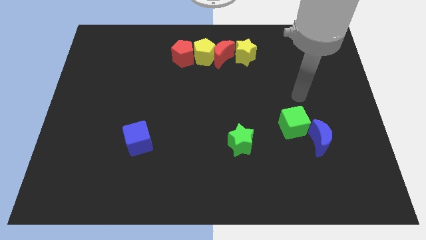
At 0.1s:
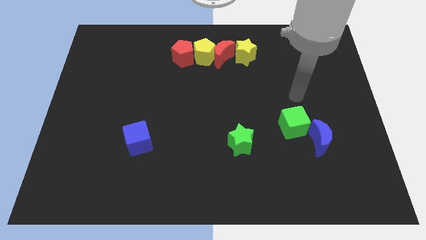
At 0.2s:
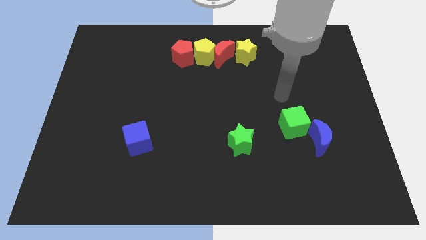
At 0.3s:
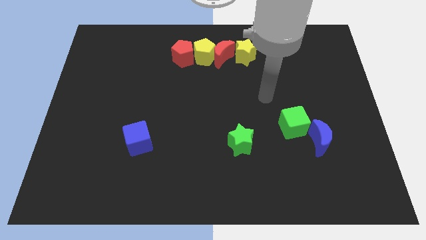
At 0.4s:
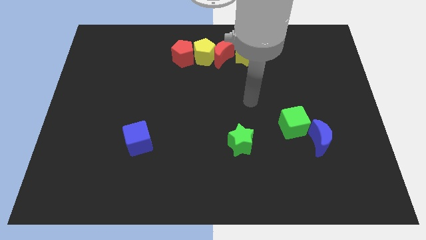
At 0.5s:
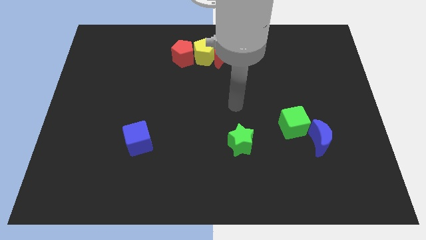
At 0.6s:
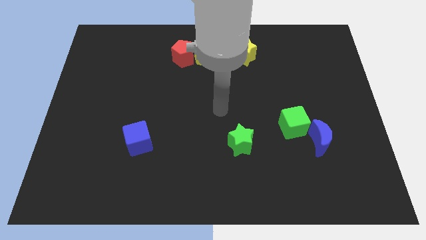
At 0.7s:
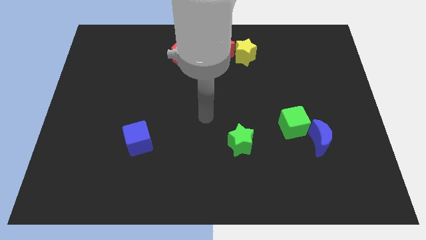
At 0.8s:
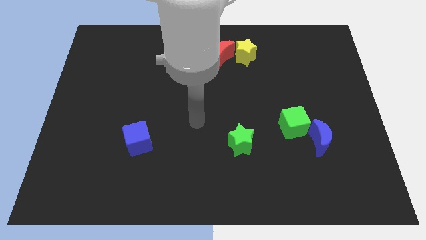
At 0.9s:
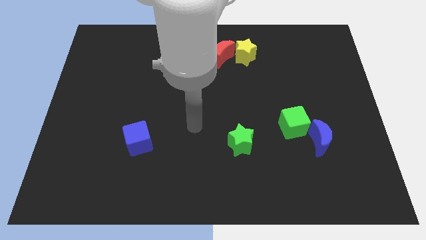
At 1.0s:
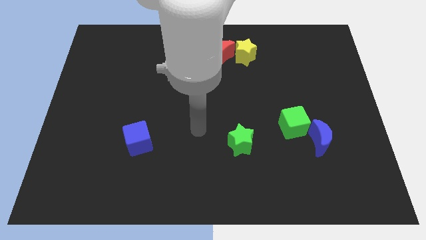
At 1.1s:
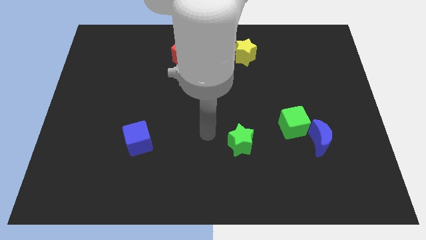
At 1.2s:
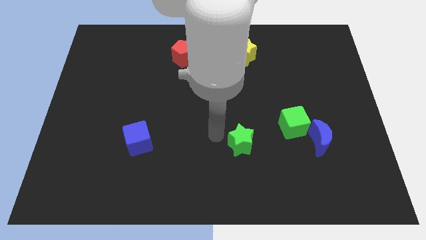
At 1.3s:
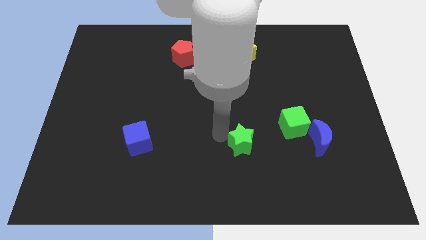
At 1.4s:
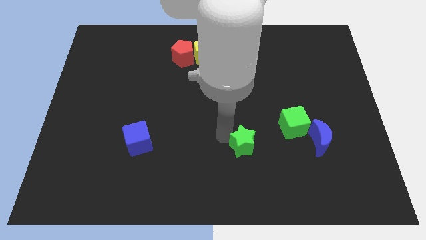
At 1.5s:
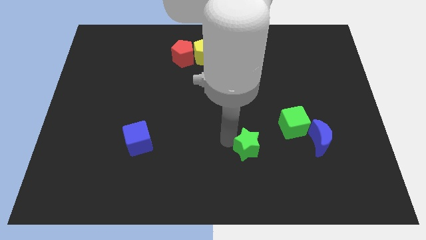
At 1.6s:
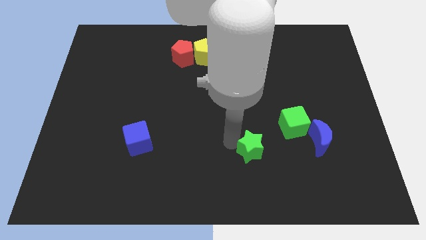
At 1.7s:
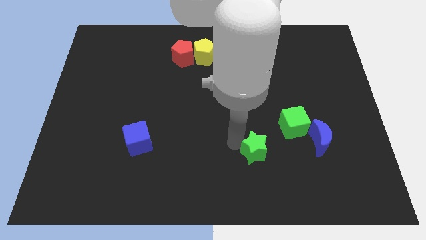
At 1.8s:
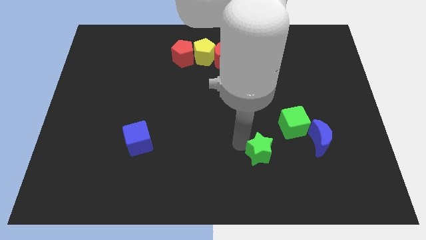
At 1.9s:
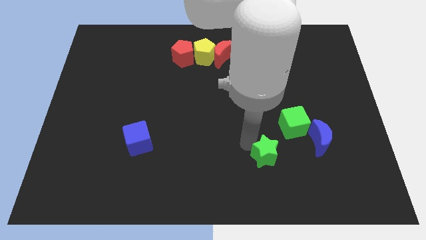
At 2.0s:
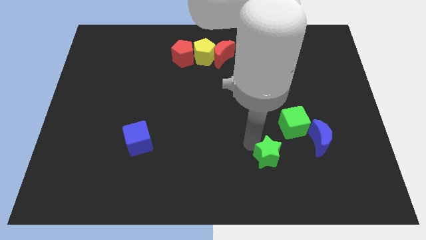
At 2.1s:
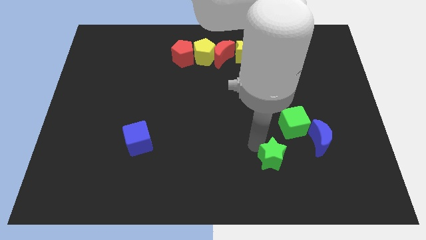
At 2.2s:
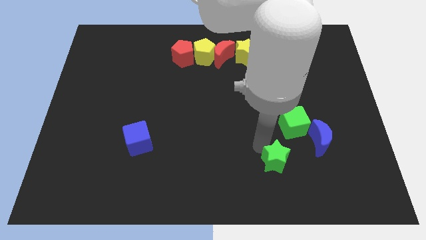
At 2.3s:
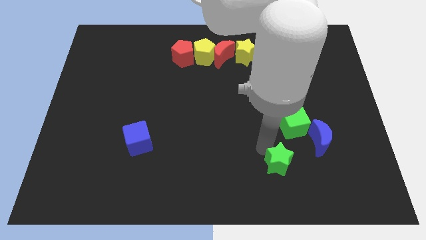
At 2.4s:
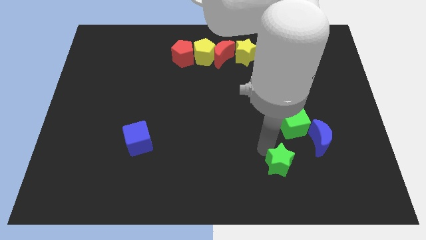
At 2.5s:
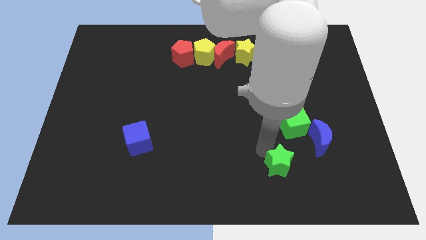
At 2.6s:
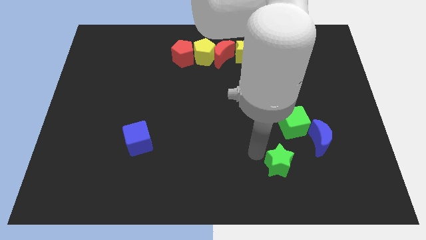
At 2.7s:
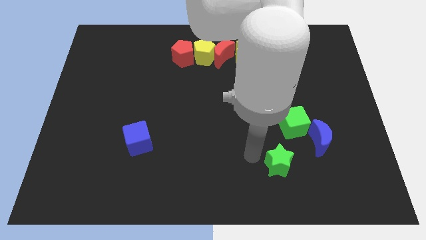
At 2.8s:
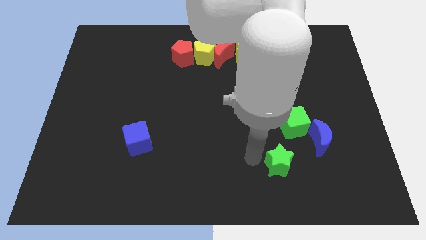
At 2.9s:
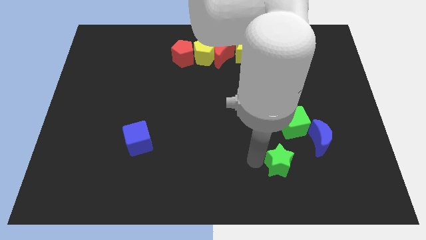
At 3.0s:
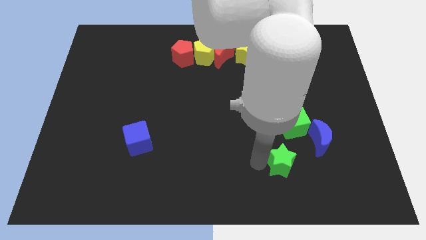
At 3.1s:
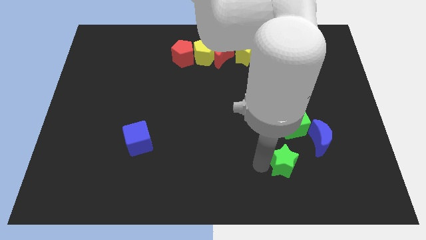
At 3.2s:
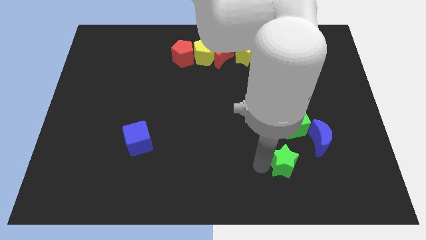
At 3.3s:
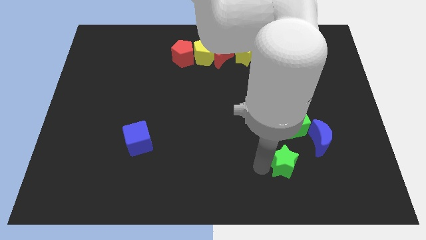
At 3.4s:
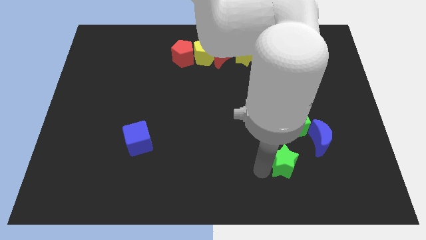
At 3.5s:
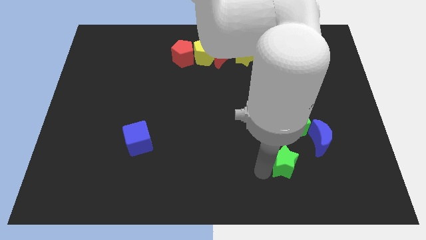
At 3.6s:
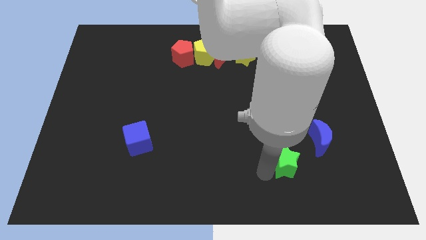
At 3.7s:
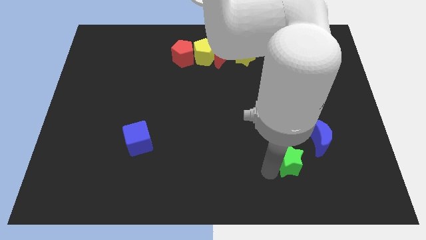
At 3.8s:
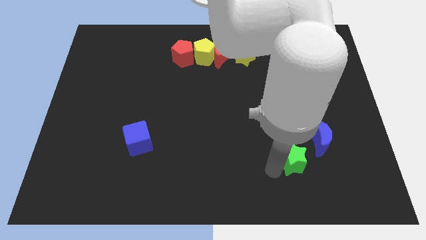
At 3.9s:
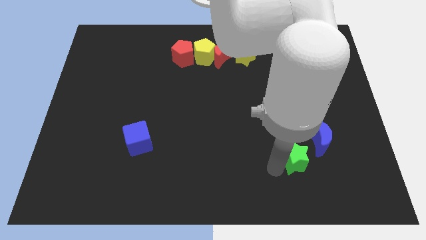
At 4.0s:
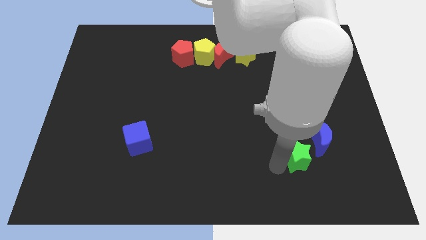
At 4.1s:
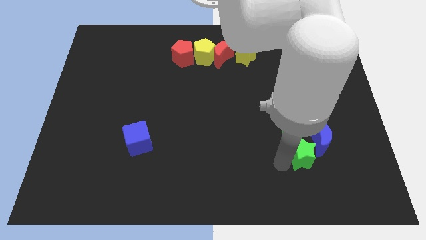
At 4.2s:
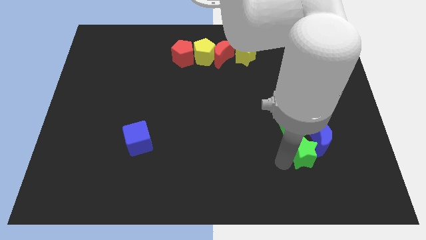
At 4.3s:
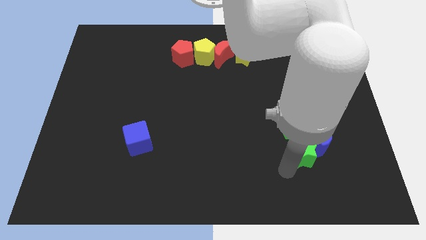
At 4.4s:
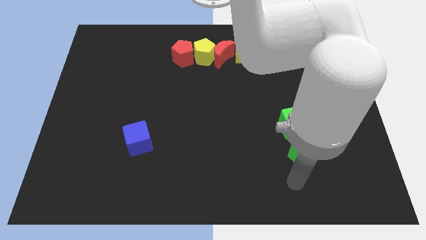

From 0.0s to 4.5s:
place the green star below the green cube

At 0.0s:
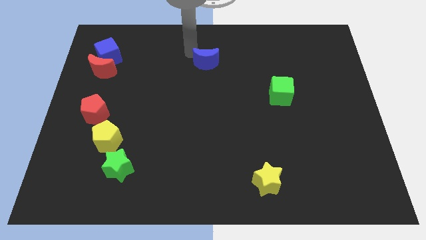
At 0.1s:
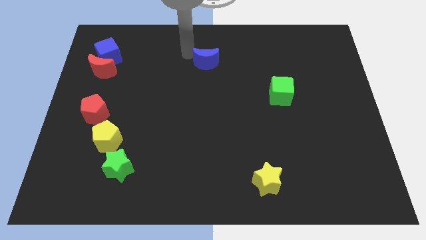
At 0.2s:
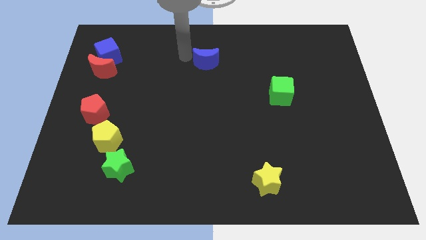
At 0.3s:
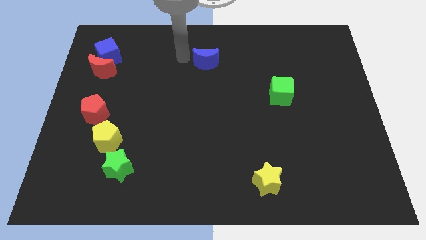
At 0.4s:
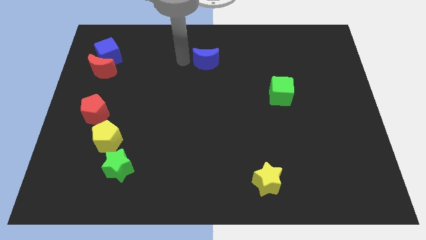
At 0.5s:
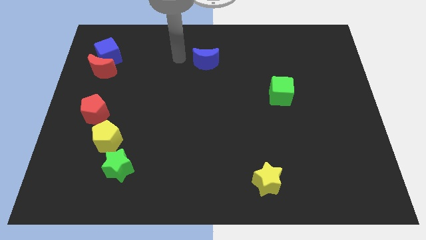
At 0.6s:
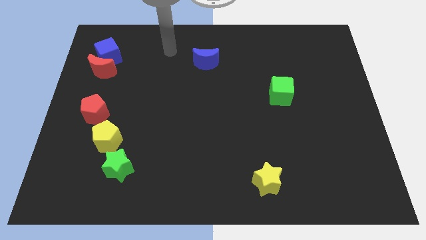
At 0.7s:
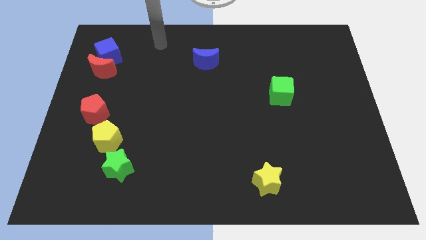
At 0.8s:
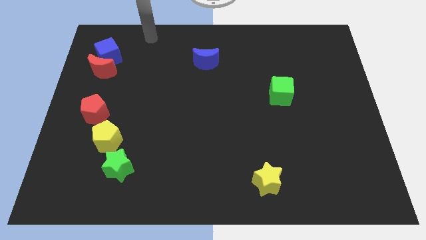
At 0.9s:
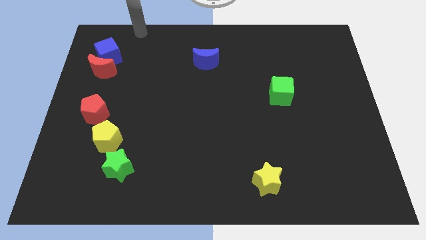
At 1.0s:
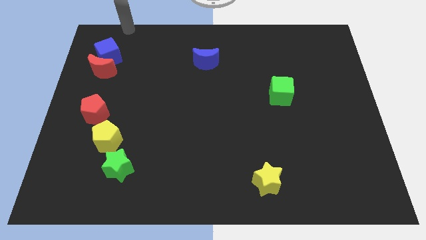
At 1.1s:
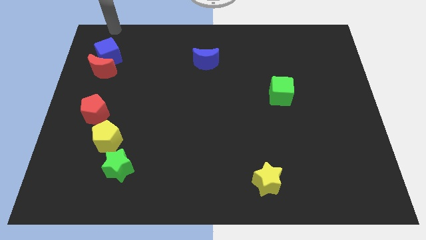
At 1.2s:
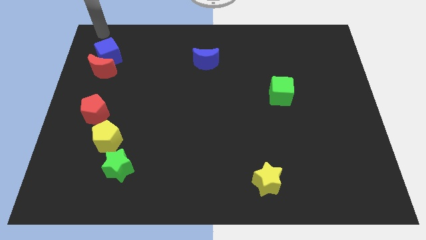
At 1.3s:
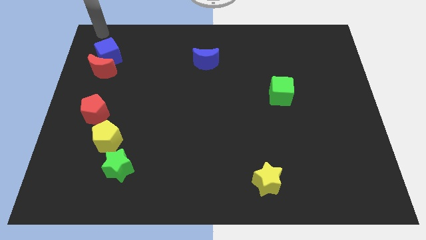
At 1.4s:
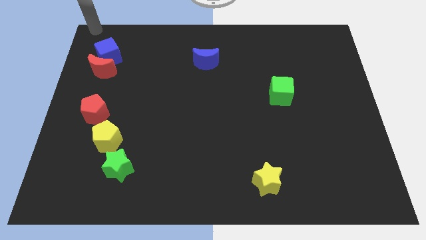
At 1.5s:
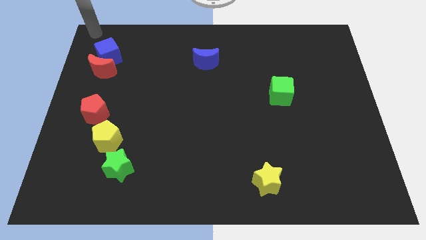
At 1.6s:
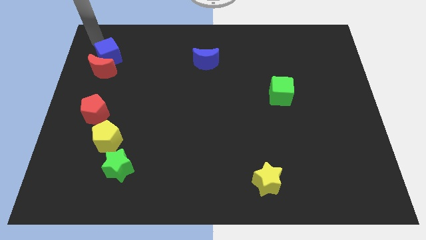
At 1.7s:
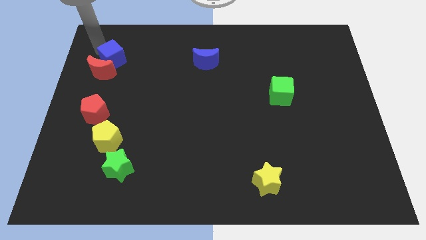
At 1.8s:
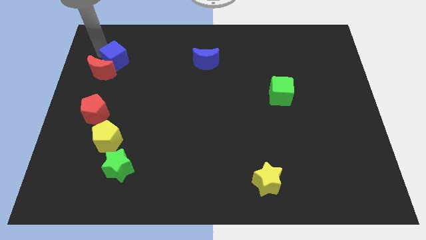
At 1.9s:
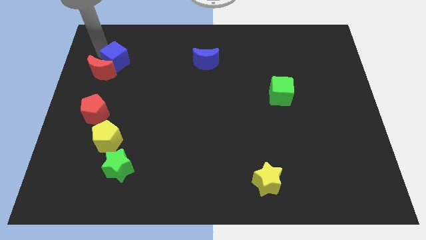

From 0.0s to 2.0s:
move the arm to the cube

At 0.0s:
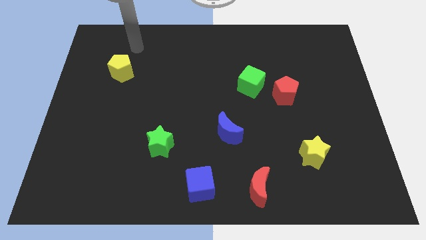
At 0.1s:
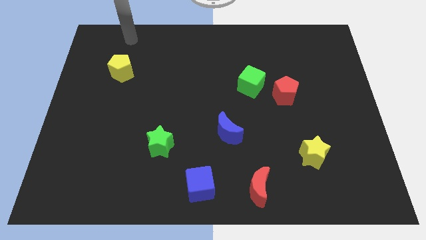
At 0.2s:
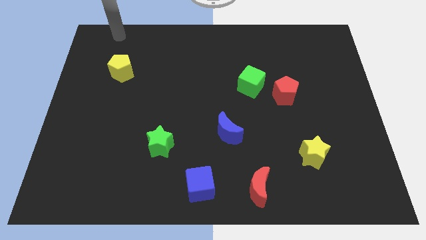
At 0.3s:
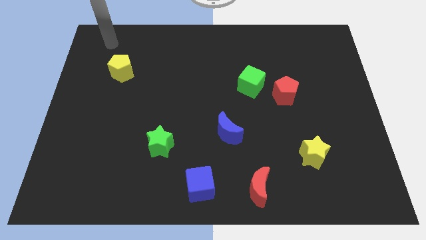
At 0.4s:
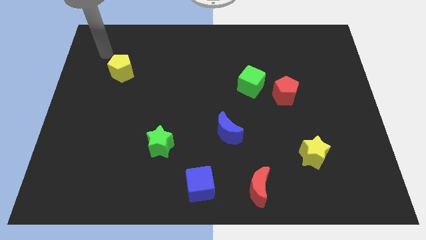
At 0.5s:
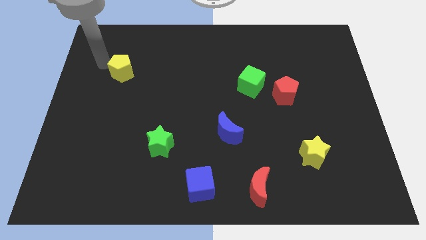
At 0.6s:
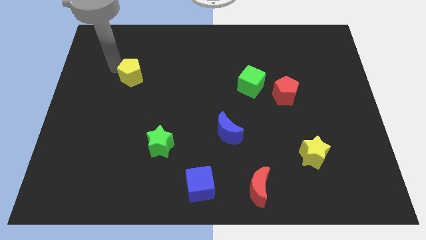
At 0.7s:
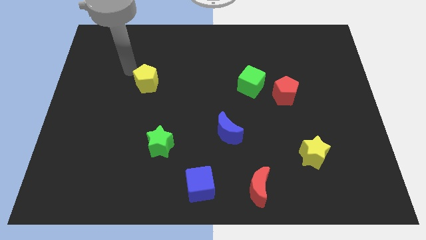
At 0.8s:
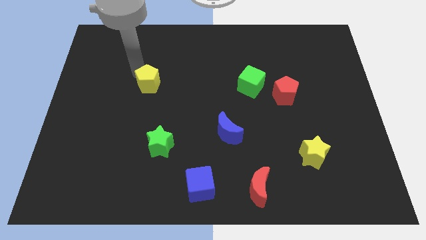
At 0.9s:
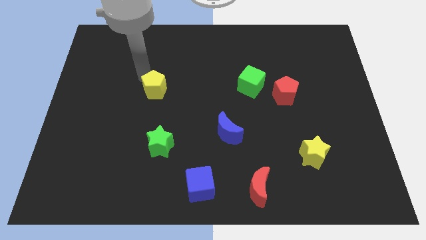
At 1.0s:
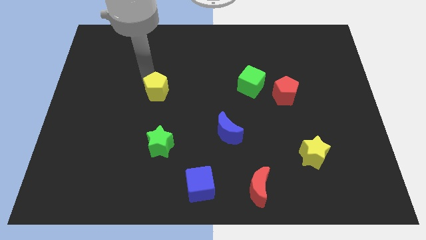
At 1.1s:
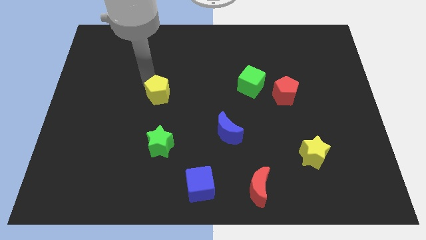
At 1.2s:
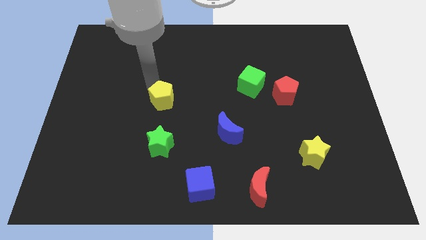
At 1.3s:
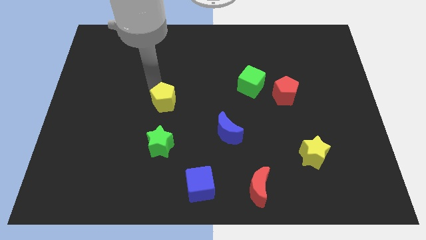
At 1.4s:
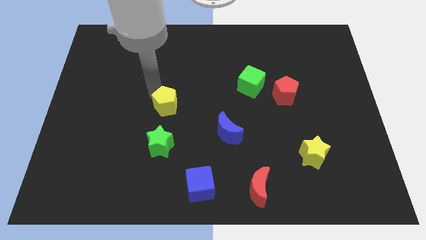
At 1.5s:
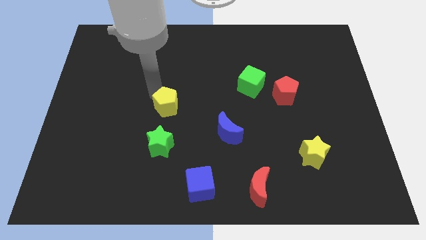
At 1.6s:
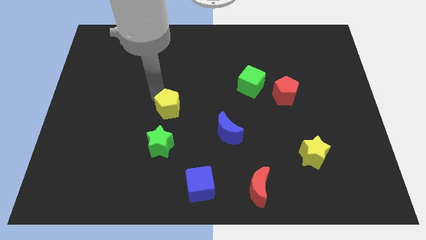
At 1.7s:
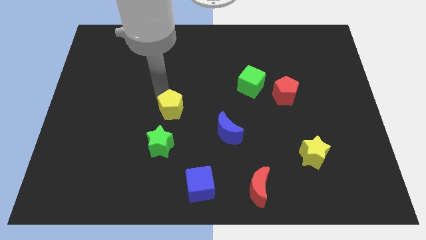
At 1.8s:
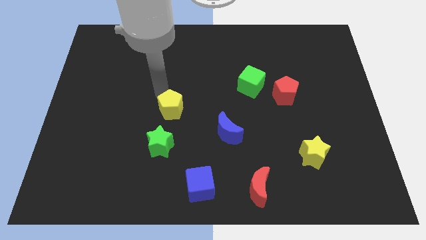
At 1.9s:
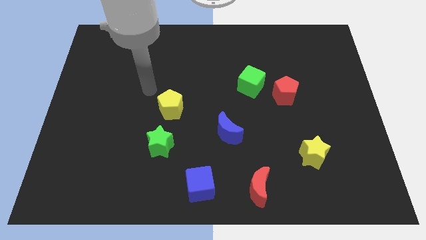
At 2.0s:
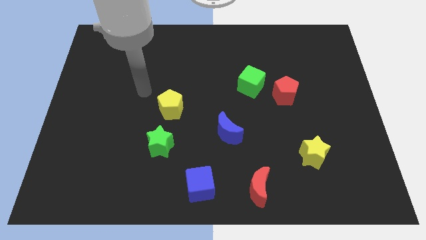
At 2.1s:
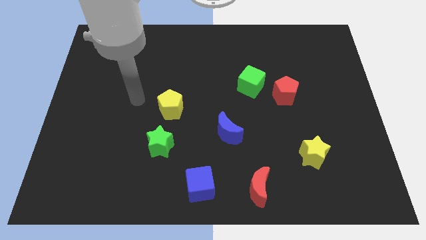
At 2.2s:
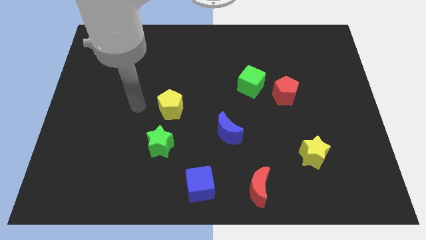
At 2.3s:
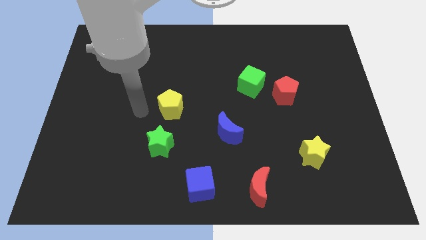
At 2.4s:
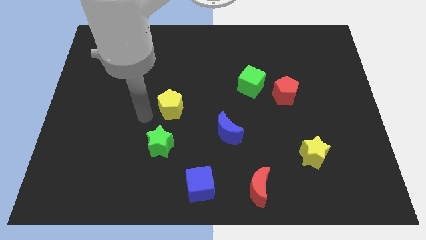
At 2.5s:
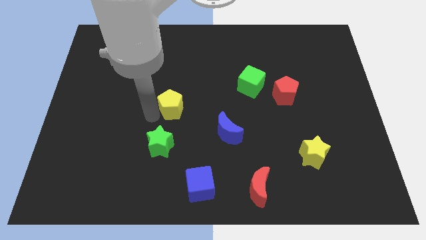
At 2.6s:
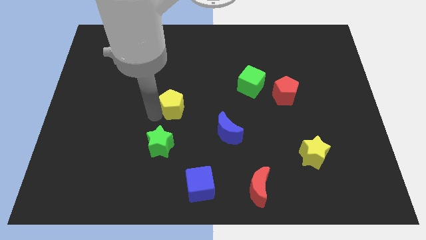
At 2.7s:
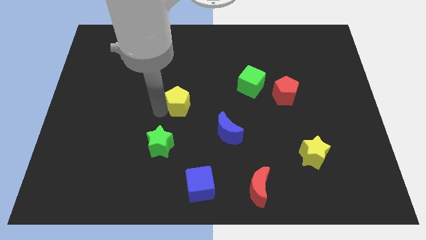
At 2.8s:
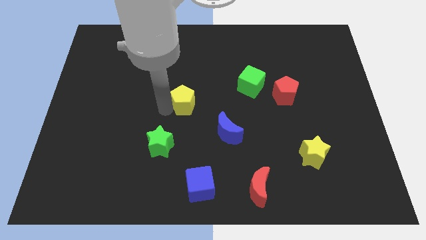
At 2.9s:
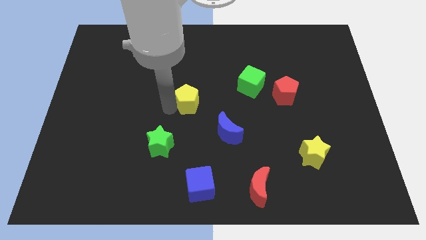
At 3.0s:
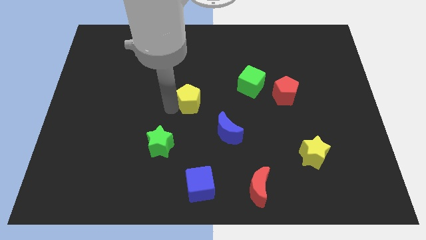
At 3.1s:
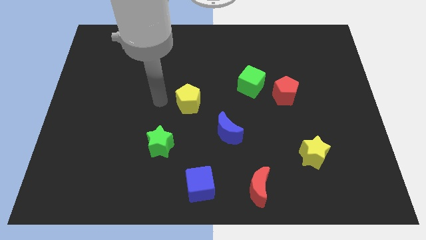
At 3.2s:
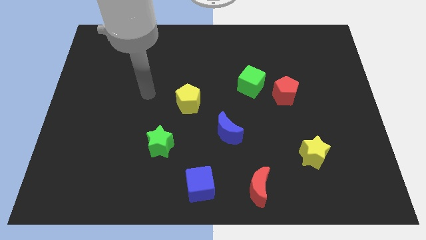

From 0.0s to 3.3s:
place the yellow pentagon above the blue cube
